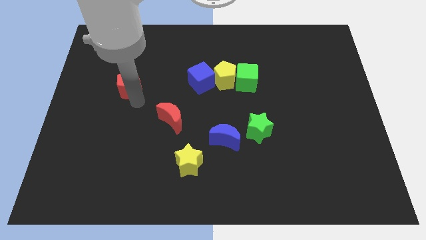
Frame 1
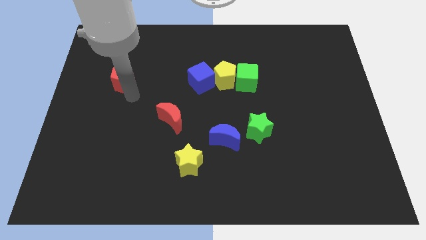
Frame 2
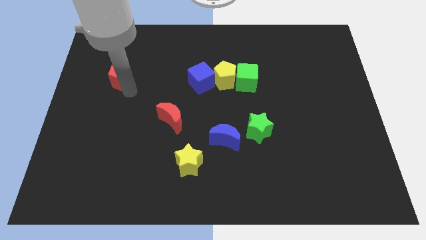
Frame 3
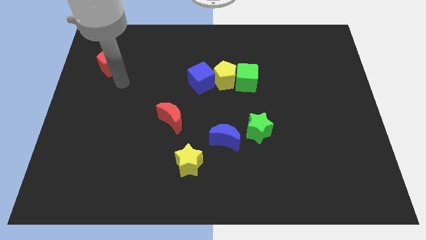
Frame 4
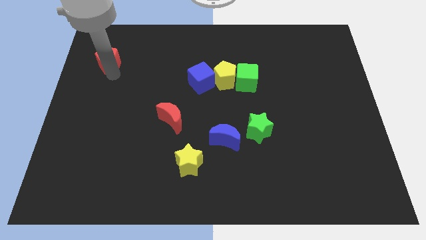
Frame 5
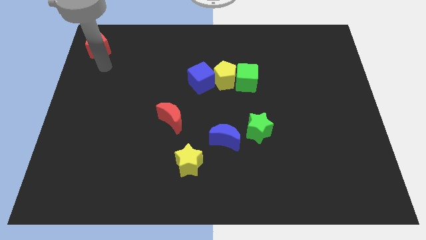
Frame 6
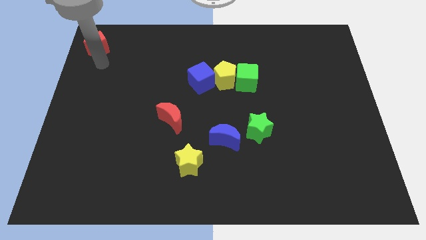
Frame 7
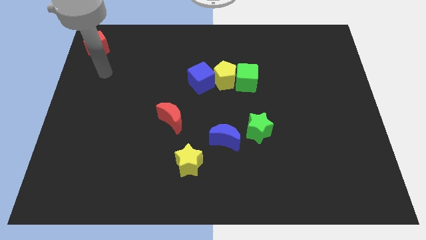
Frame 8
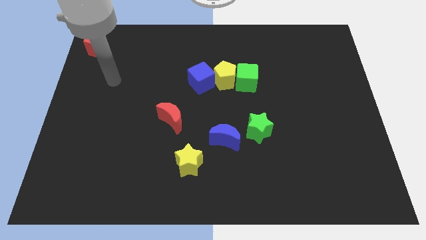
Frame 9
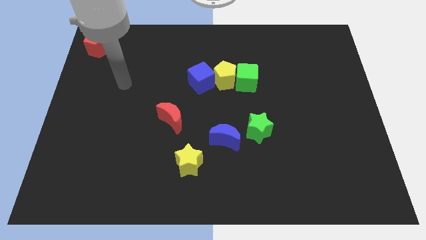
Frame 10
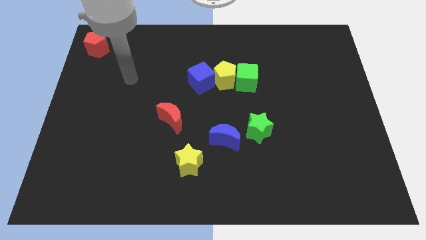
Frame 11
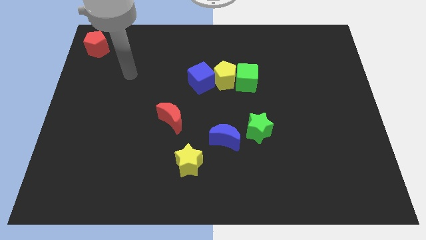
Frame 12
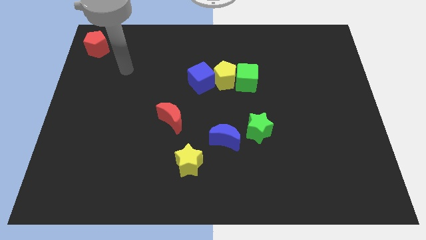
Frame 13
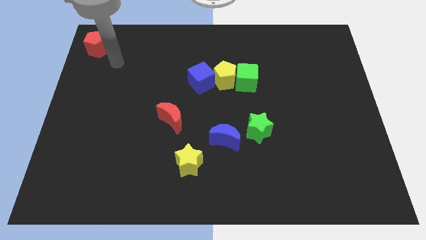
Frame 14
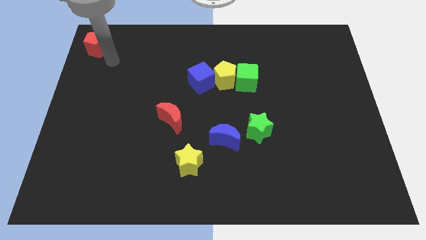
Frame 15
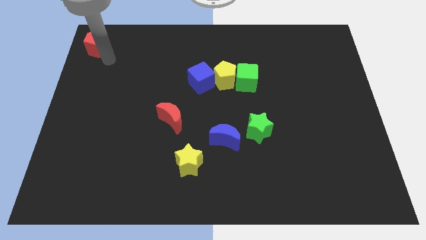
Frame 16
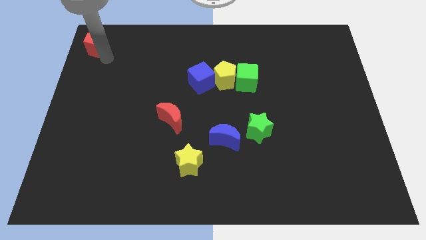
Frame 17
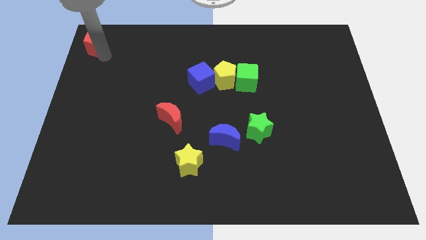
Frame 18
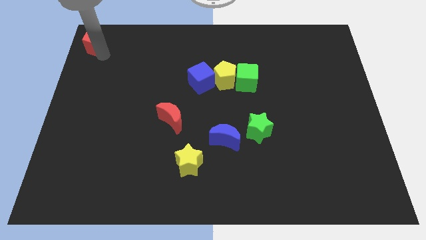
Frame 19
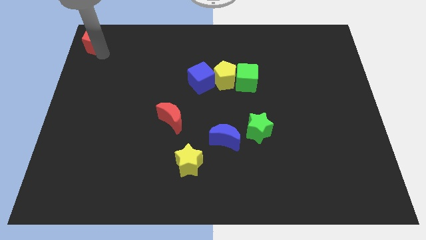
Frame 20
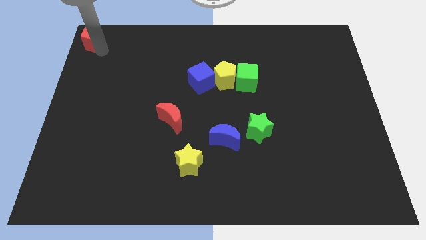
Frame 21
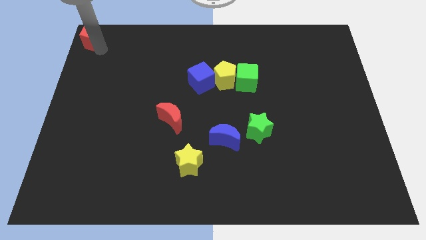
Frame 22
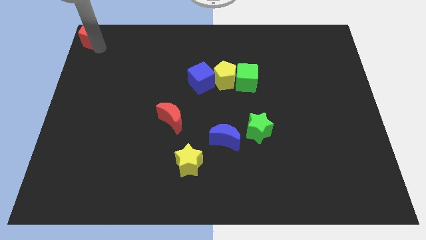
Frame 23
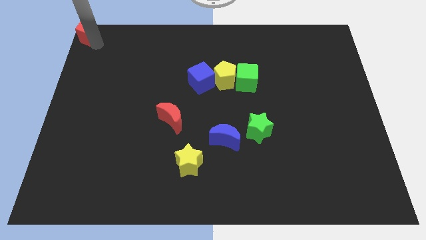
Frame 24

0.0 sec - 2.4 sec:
move the arm to the top left

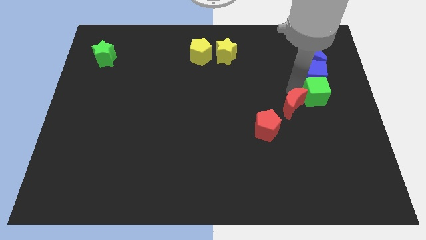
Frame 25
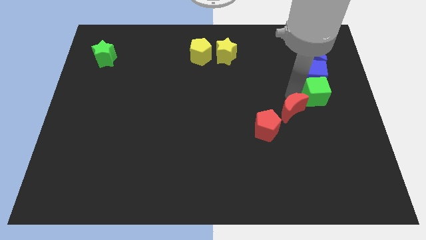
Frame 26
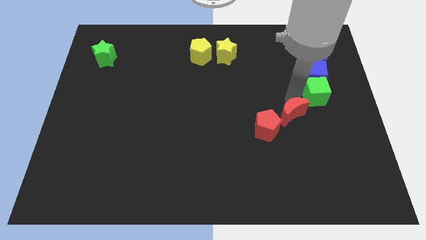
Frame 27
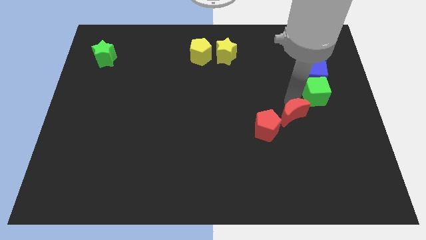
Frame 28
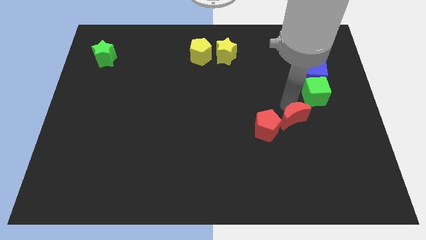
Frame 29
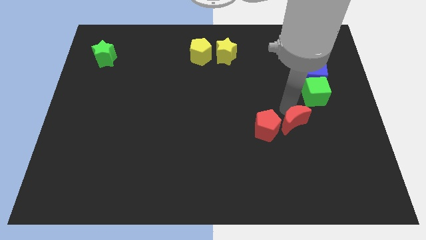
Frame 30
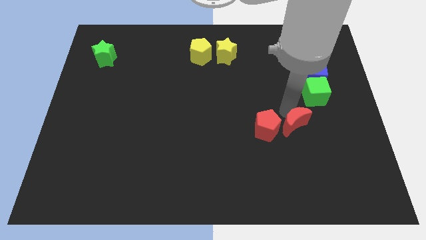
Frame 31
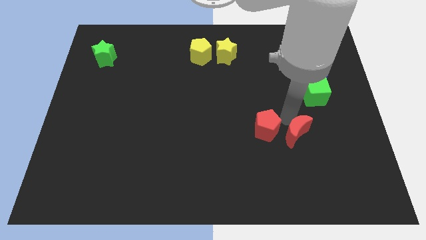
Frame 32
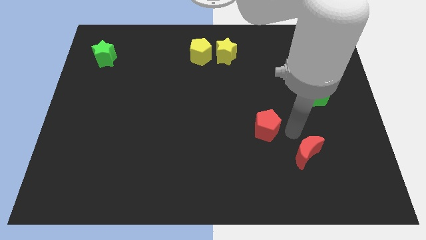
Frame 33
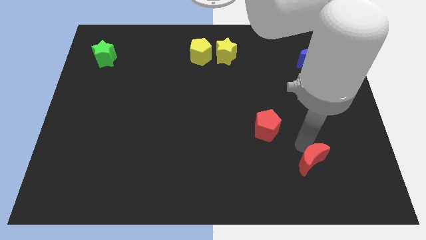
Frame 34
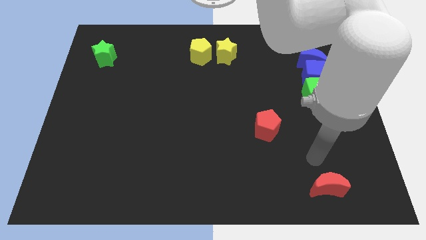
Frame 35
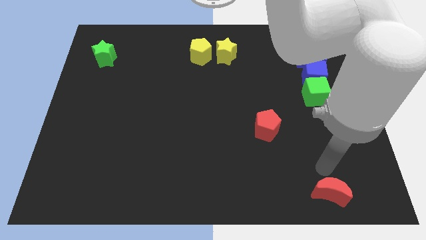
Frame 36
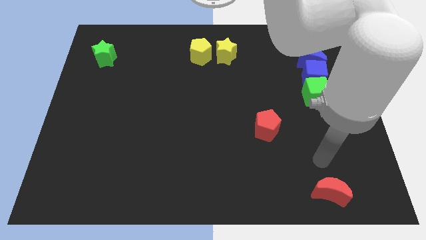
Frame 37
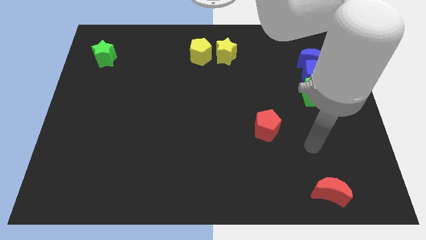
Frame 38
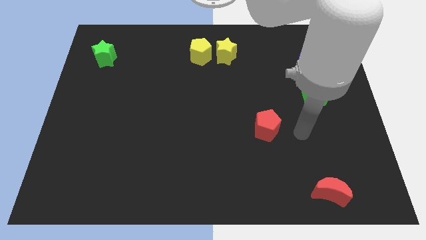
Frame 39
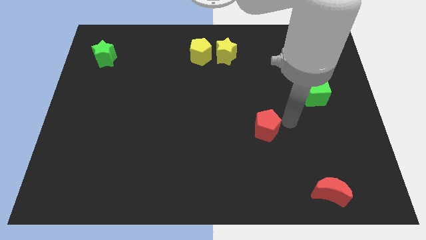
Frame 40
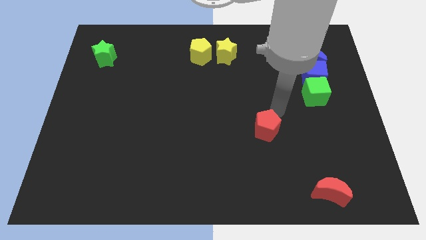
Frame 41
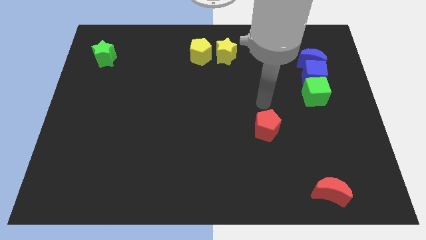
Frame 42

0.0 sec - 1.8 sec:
move the red crescent to the bottom right corner

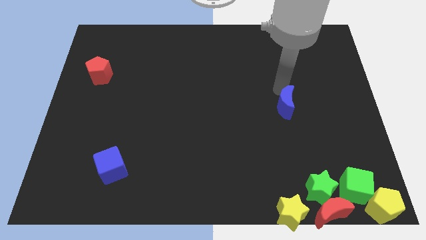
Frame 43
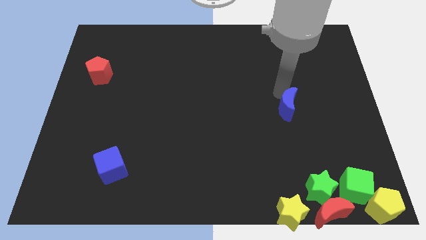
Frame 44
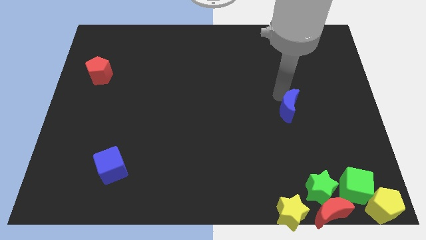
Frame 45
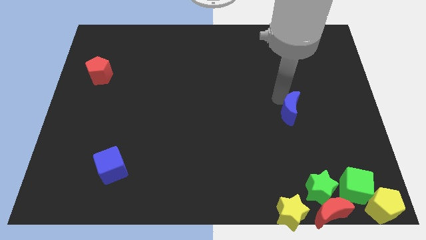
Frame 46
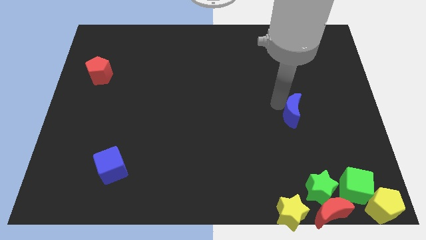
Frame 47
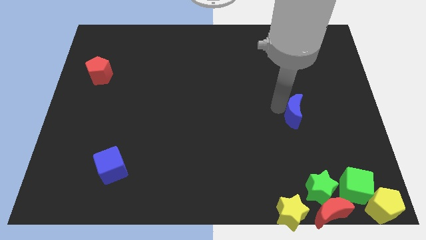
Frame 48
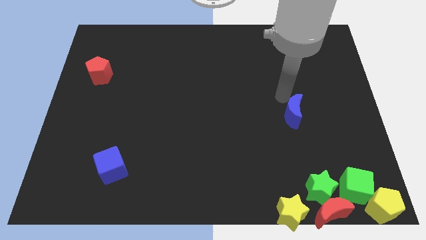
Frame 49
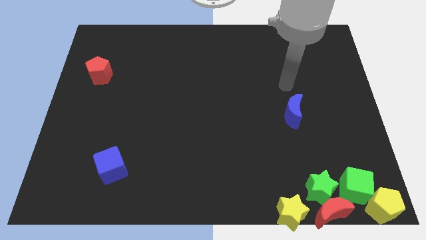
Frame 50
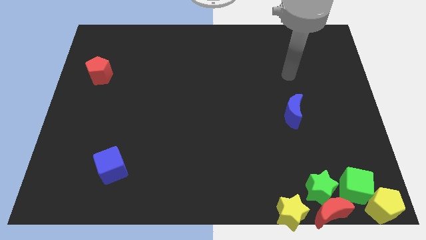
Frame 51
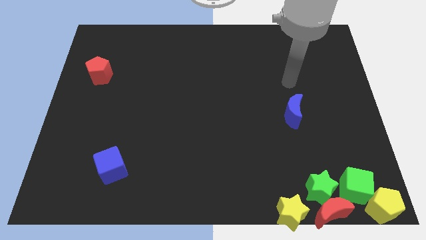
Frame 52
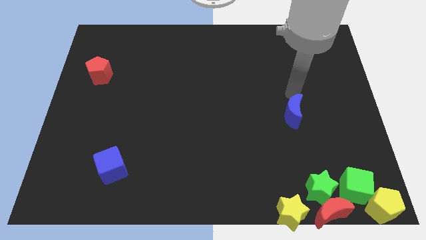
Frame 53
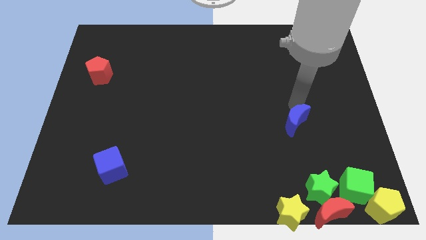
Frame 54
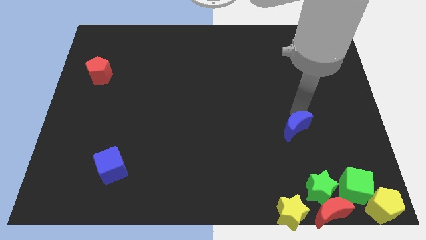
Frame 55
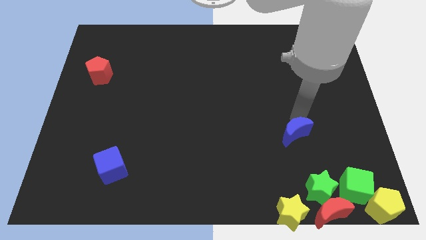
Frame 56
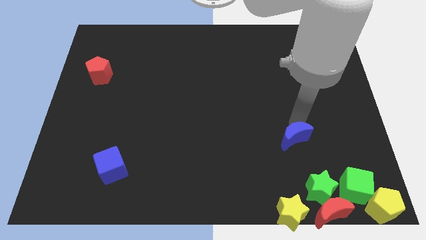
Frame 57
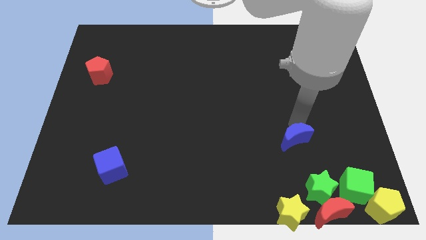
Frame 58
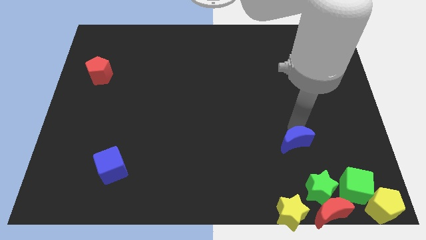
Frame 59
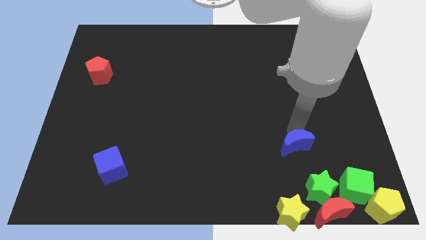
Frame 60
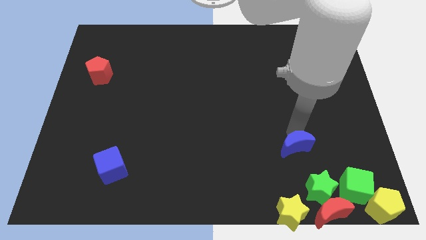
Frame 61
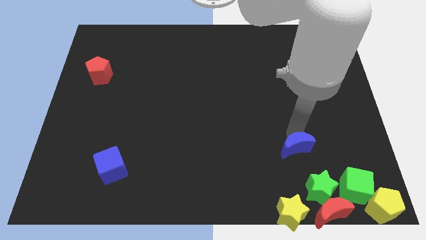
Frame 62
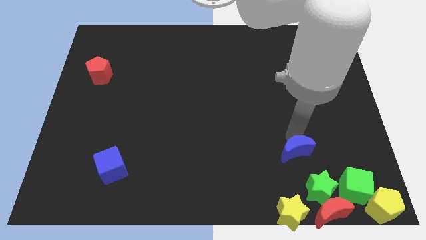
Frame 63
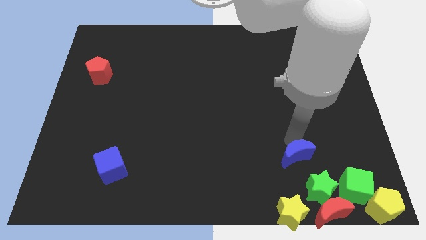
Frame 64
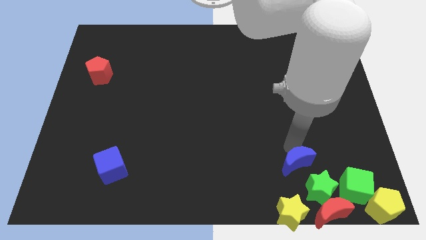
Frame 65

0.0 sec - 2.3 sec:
drag the blue semi circle towards the green star

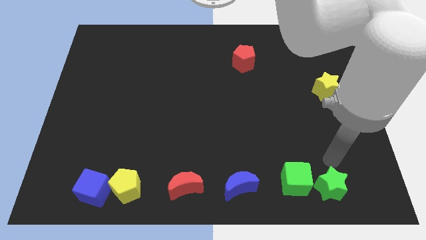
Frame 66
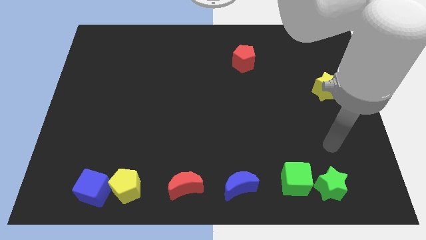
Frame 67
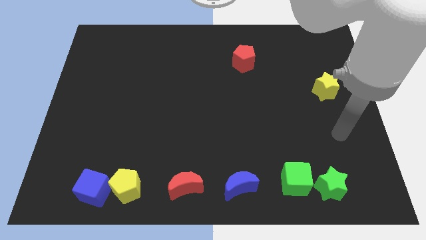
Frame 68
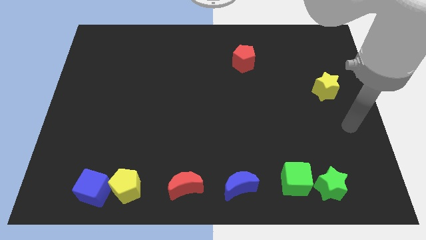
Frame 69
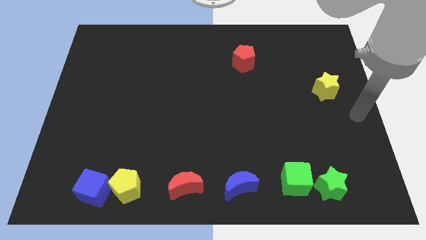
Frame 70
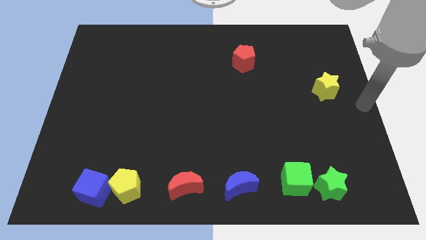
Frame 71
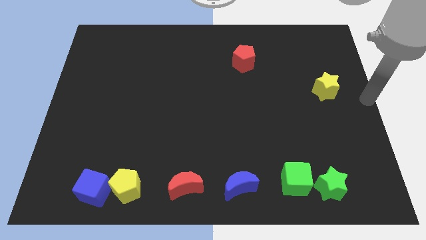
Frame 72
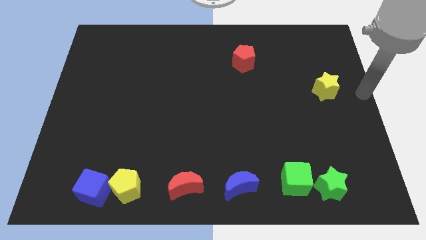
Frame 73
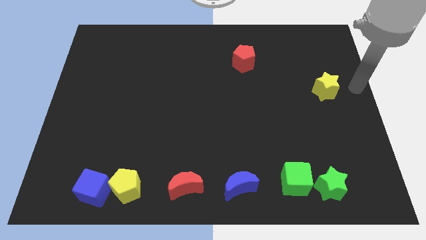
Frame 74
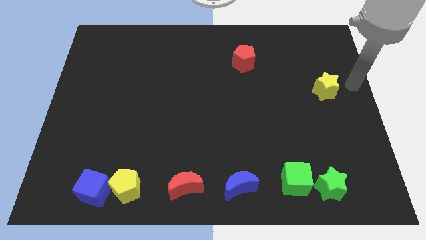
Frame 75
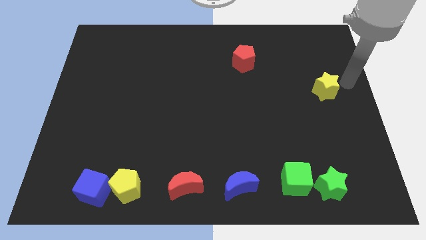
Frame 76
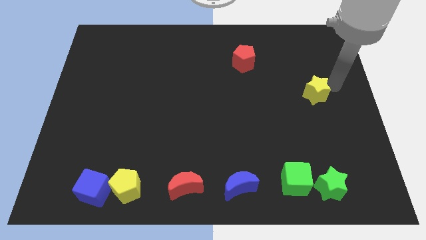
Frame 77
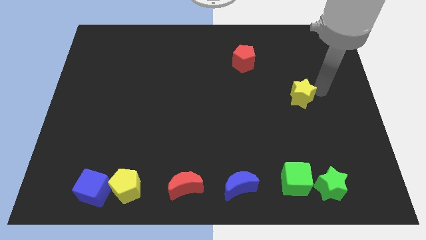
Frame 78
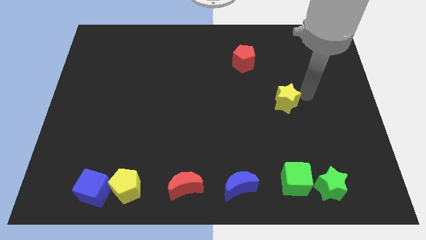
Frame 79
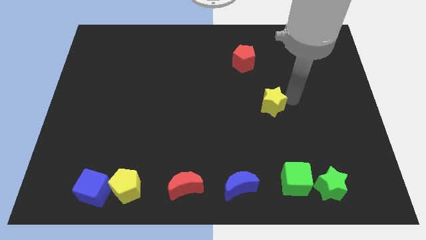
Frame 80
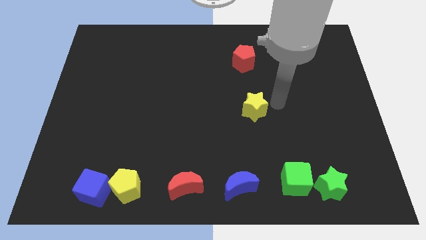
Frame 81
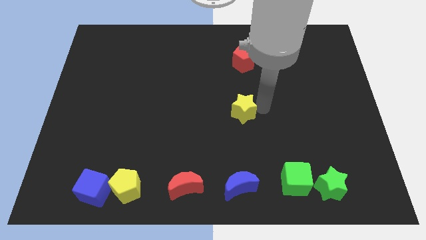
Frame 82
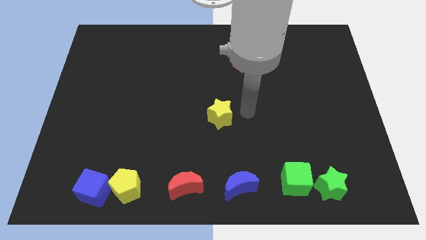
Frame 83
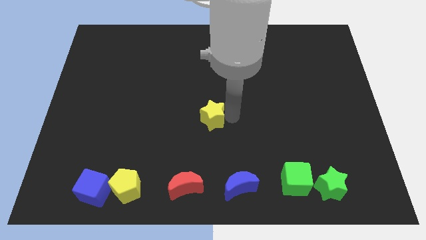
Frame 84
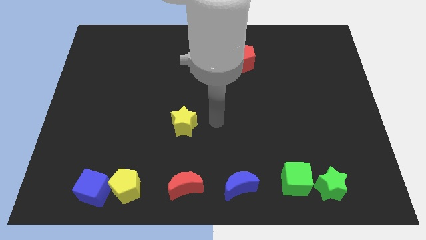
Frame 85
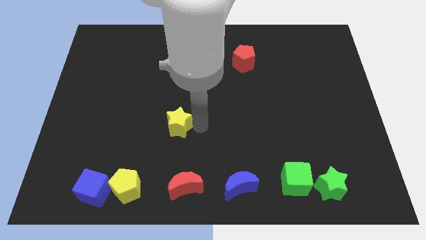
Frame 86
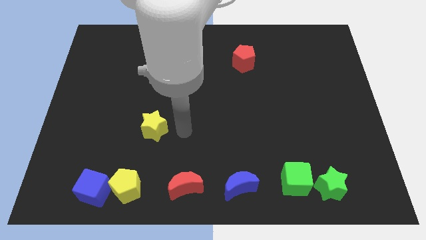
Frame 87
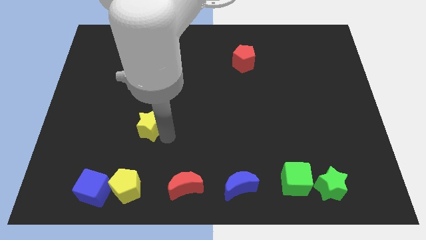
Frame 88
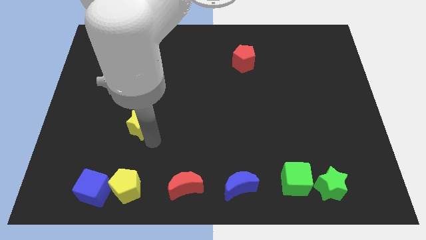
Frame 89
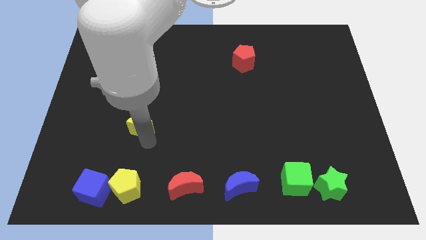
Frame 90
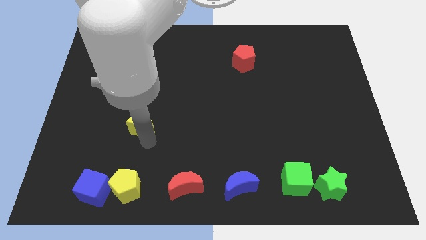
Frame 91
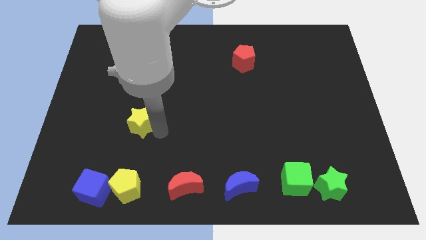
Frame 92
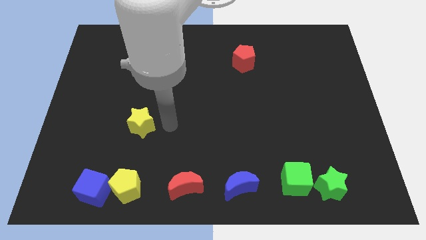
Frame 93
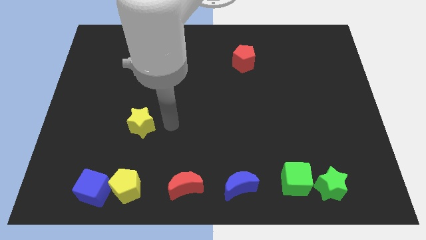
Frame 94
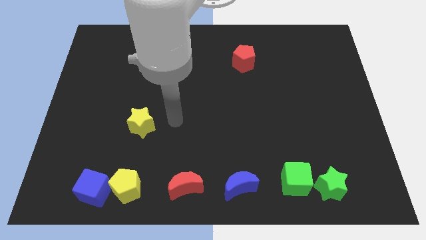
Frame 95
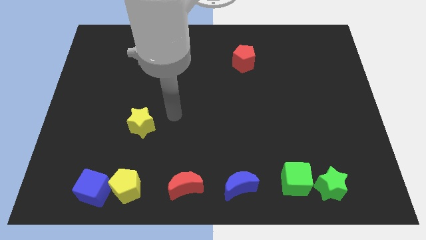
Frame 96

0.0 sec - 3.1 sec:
push yellow star above the yellow pentagon
